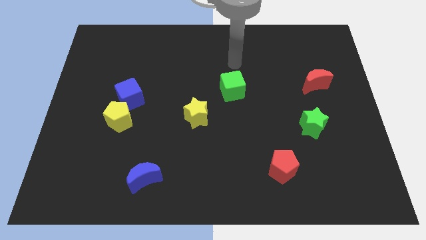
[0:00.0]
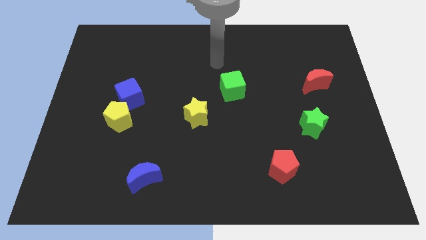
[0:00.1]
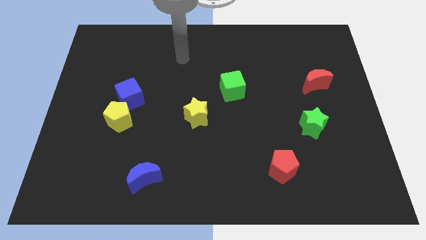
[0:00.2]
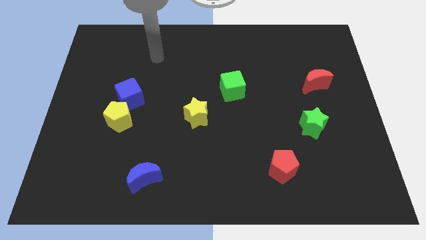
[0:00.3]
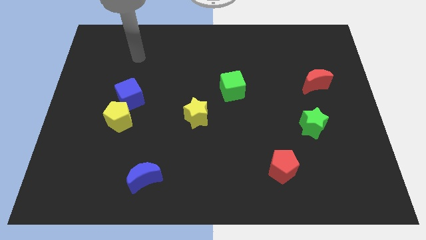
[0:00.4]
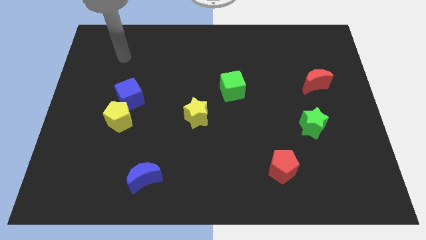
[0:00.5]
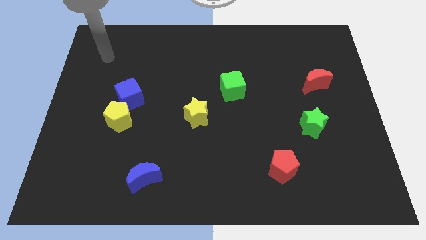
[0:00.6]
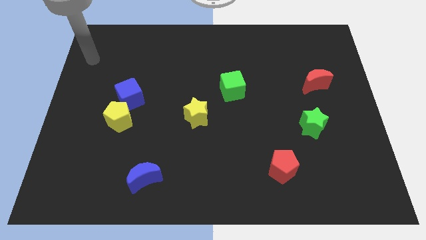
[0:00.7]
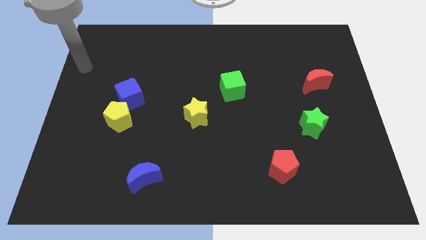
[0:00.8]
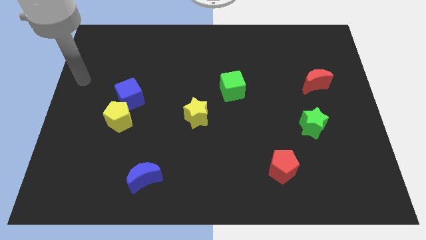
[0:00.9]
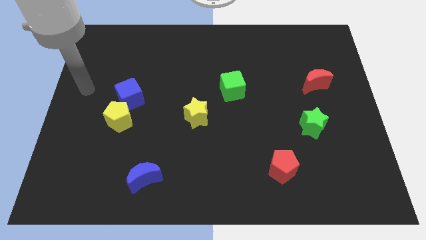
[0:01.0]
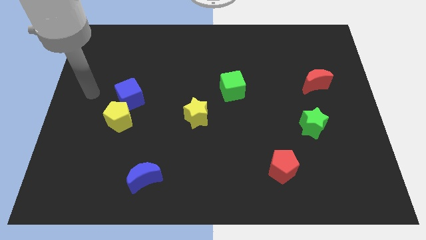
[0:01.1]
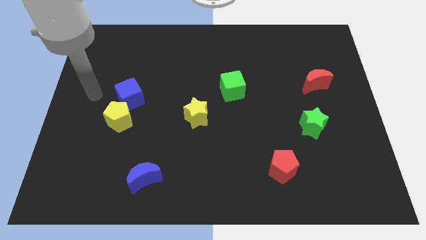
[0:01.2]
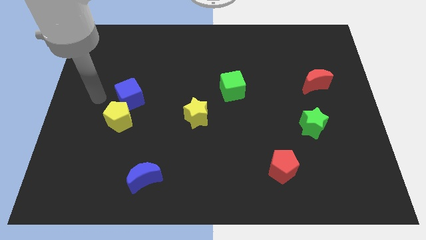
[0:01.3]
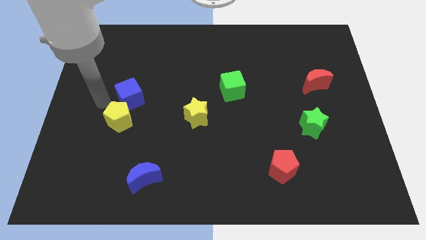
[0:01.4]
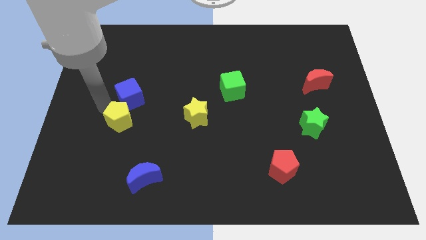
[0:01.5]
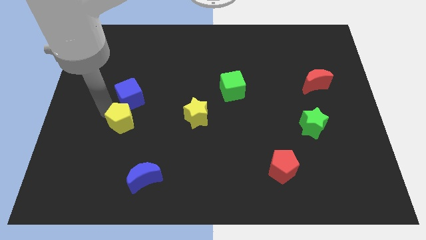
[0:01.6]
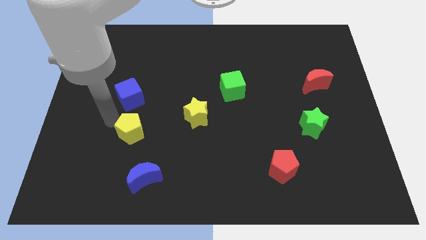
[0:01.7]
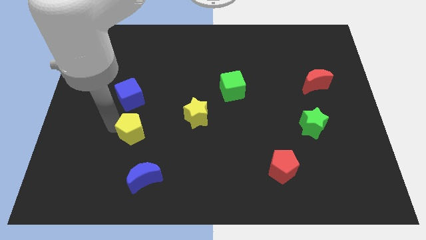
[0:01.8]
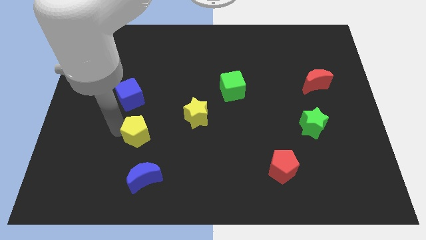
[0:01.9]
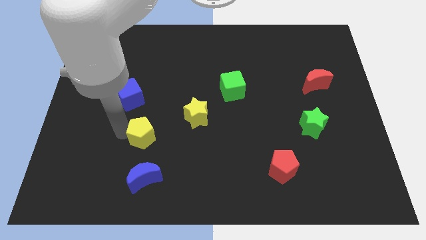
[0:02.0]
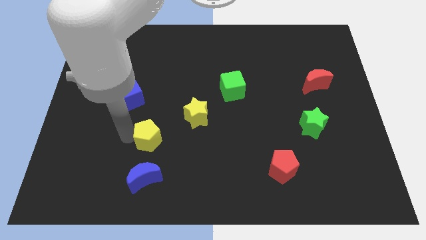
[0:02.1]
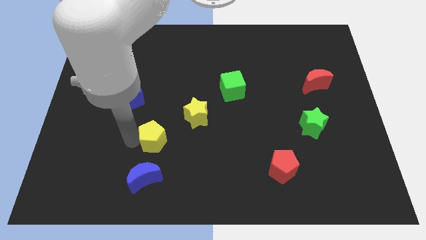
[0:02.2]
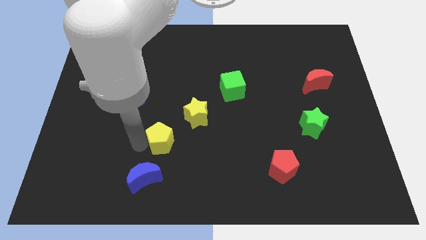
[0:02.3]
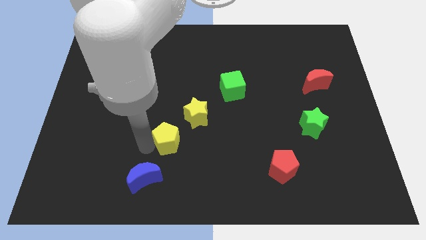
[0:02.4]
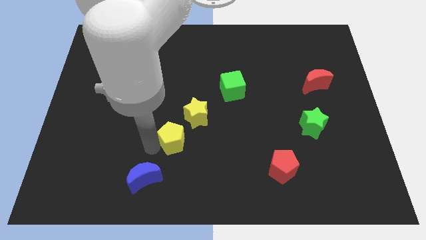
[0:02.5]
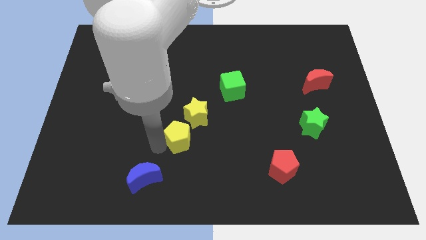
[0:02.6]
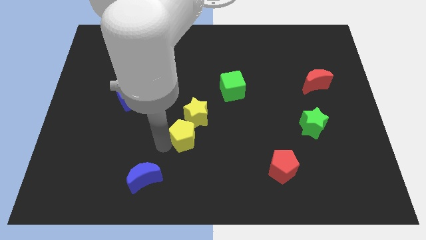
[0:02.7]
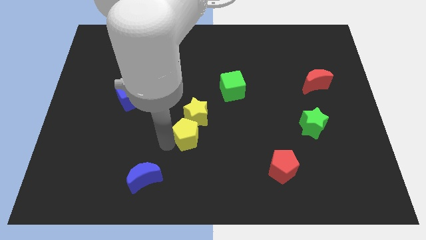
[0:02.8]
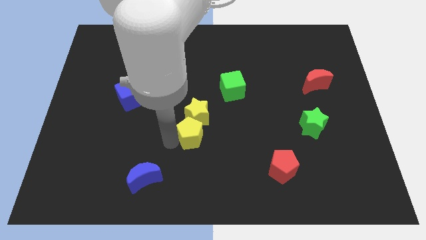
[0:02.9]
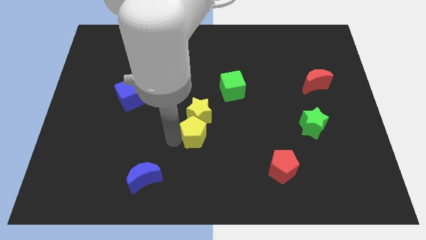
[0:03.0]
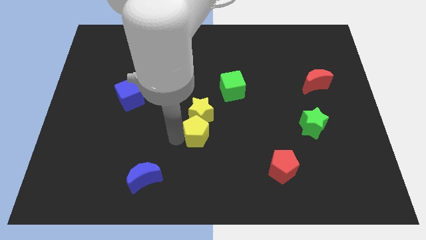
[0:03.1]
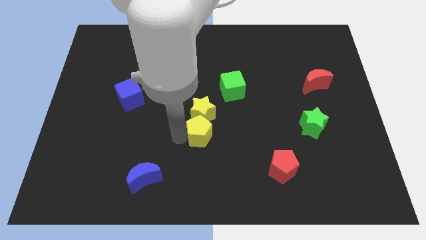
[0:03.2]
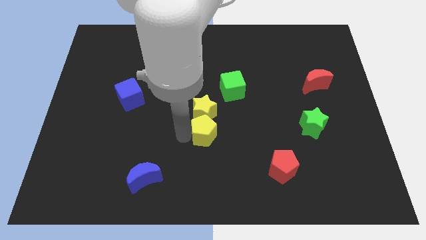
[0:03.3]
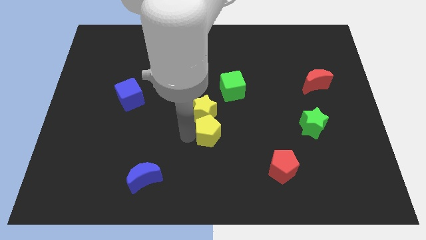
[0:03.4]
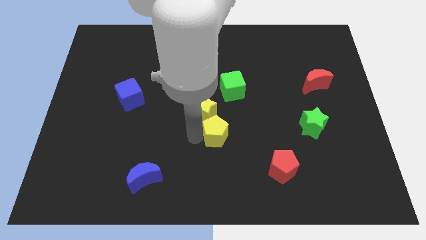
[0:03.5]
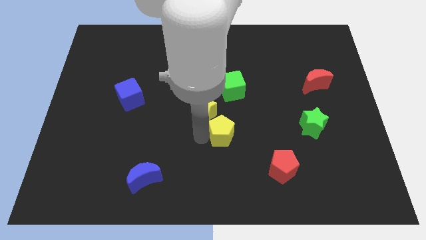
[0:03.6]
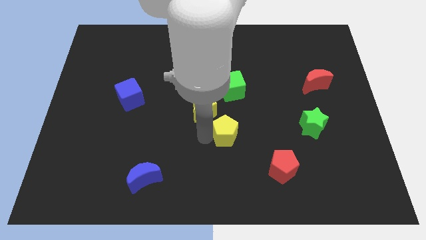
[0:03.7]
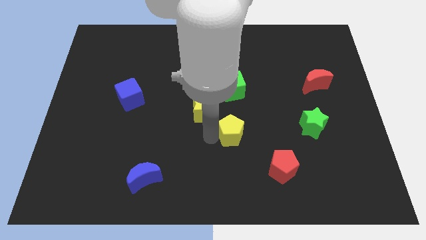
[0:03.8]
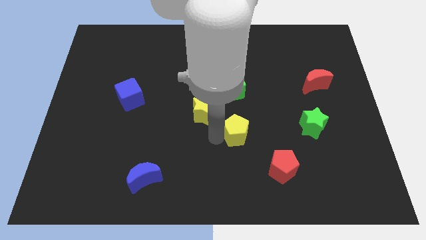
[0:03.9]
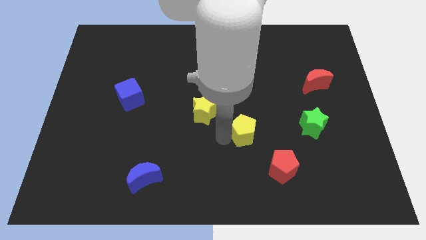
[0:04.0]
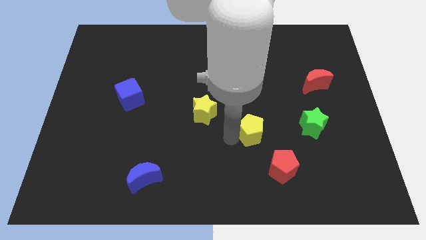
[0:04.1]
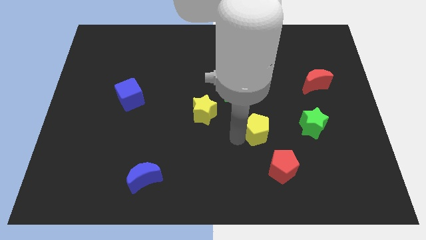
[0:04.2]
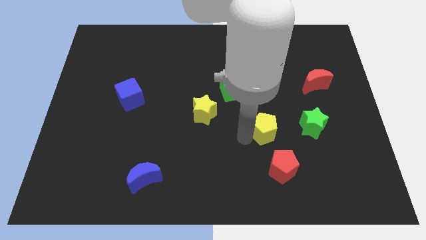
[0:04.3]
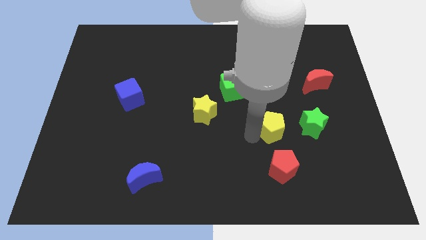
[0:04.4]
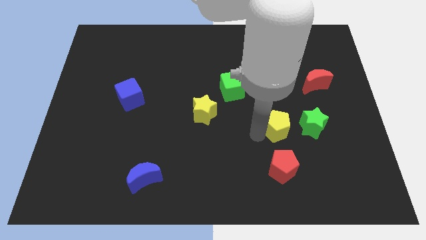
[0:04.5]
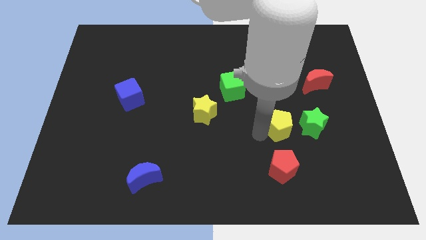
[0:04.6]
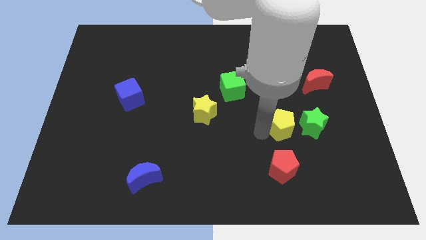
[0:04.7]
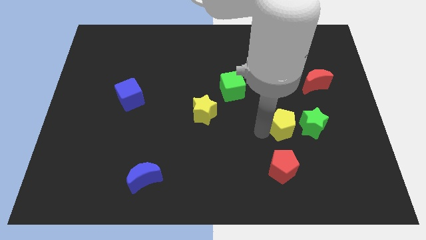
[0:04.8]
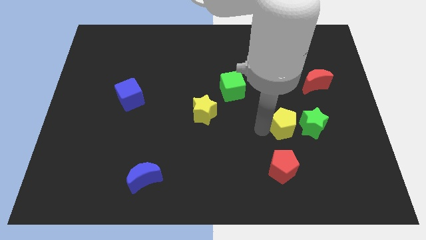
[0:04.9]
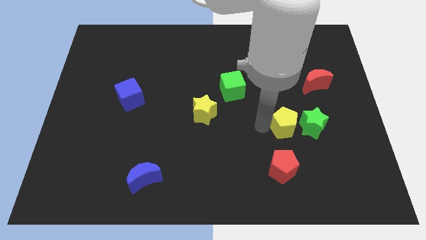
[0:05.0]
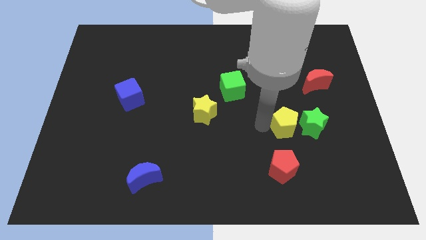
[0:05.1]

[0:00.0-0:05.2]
move the yellow pentagon to the green star

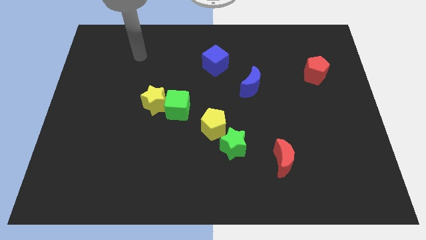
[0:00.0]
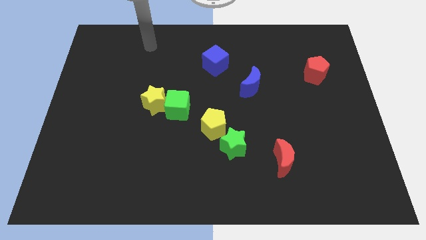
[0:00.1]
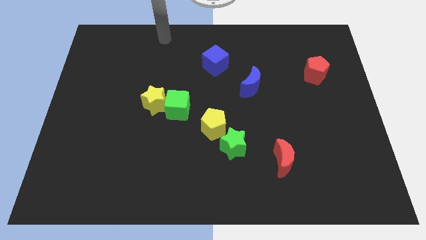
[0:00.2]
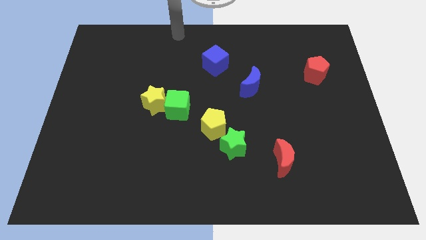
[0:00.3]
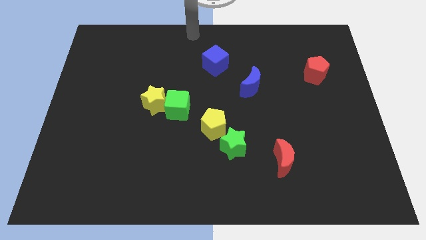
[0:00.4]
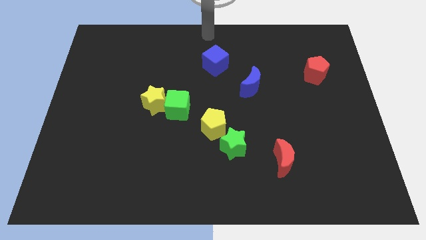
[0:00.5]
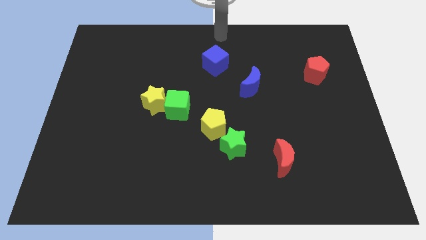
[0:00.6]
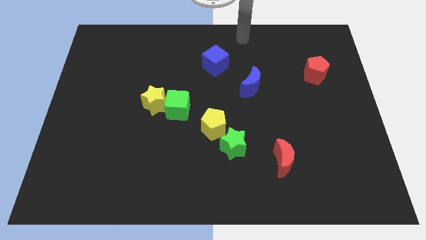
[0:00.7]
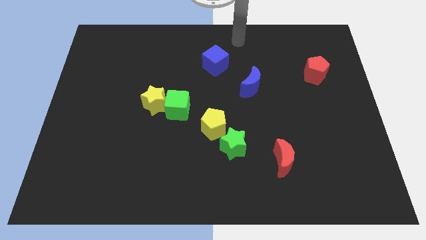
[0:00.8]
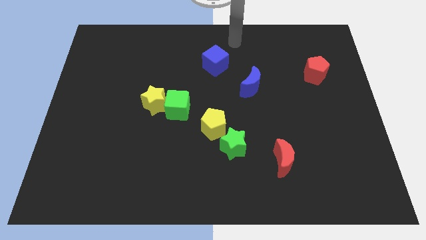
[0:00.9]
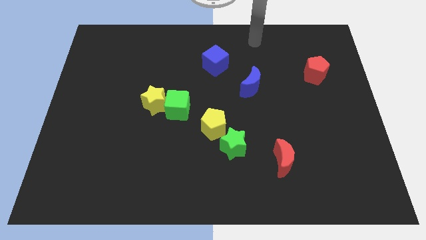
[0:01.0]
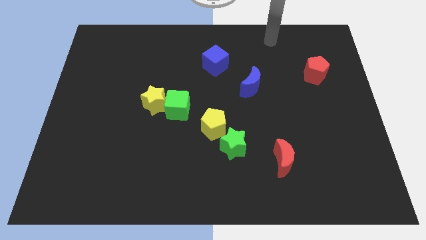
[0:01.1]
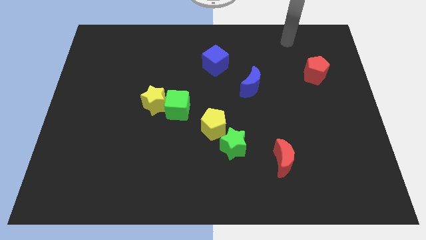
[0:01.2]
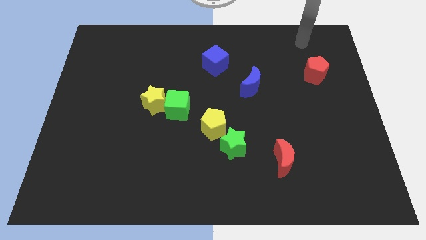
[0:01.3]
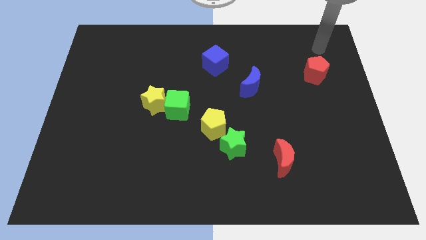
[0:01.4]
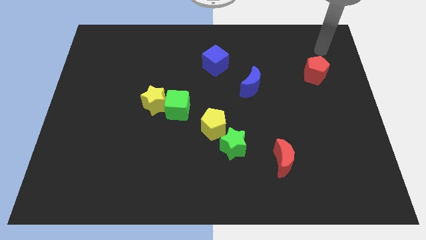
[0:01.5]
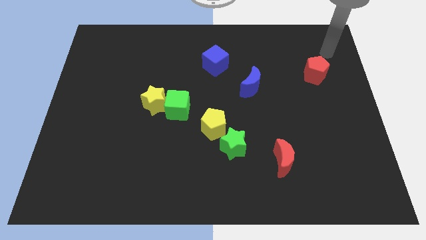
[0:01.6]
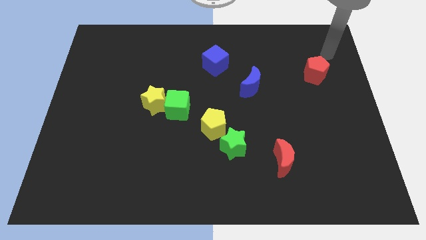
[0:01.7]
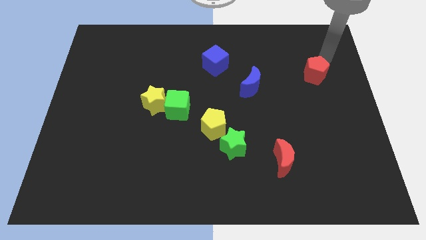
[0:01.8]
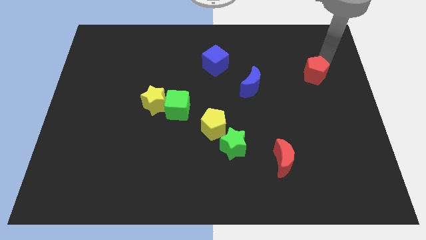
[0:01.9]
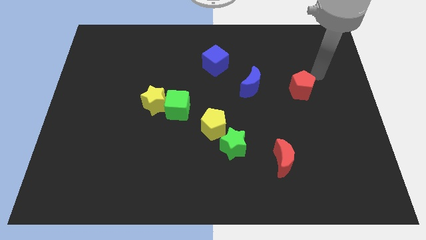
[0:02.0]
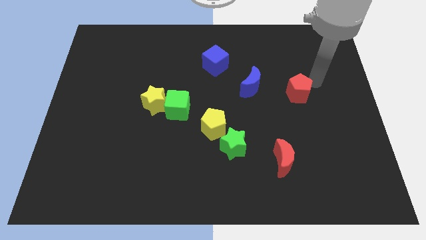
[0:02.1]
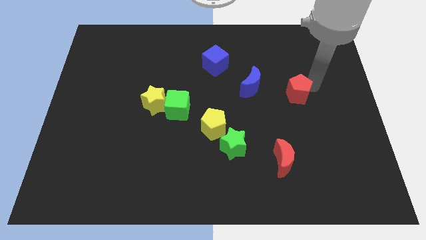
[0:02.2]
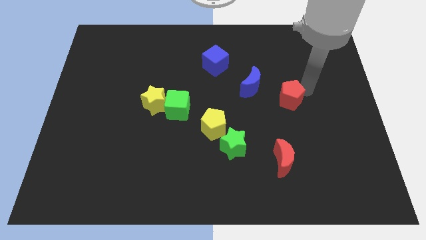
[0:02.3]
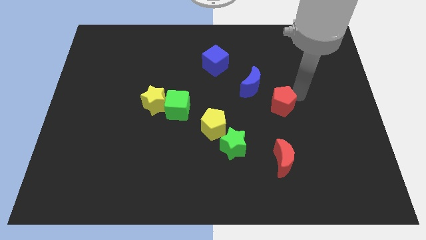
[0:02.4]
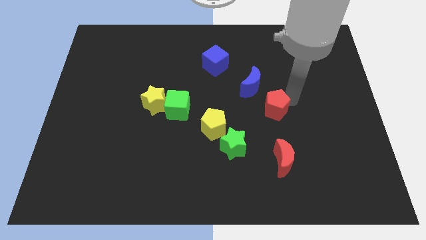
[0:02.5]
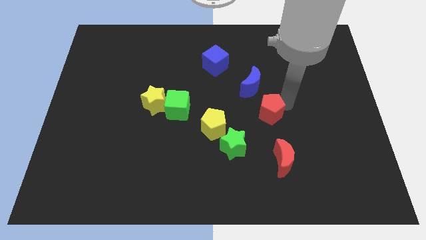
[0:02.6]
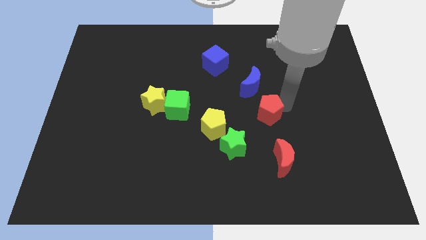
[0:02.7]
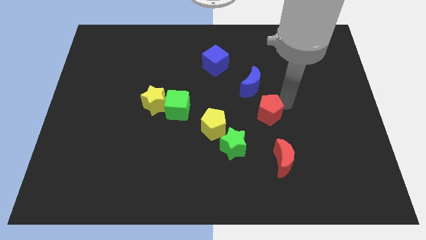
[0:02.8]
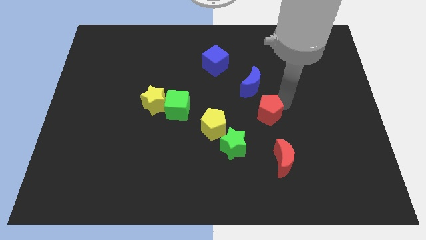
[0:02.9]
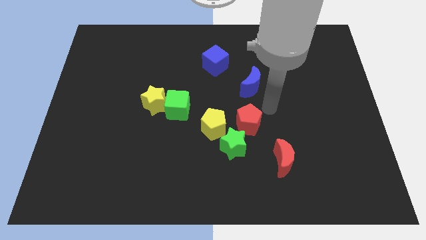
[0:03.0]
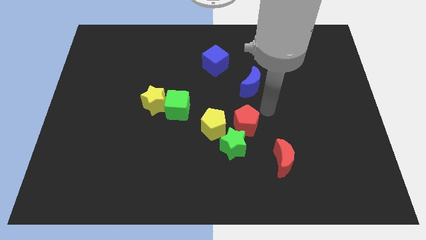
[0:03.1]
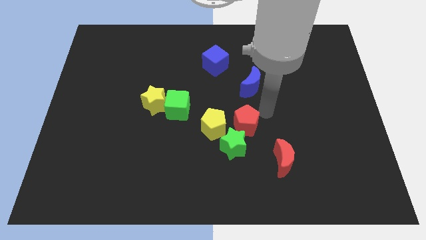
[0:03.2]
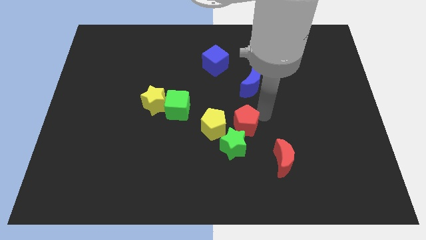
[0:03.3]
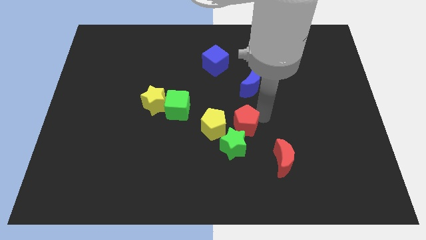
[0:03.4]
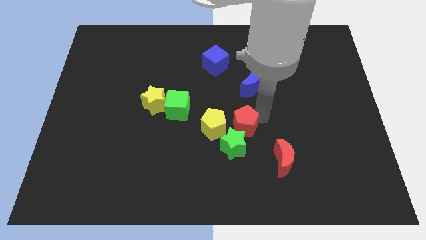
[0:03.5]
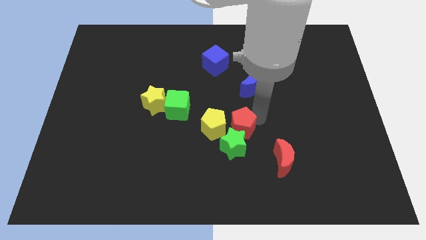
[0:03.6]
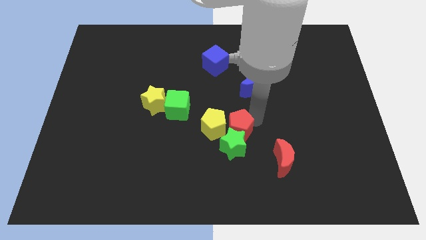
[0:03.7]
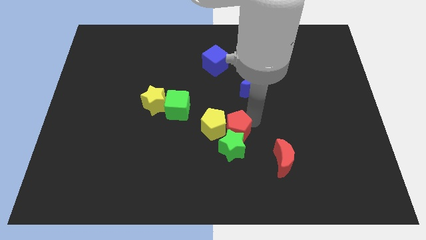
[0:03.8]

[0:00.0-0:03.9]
put the red pentagon to the green star
